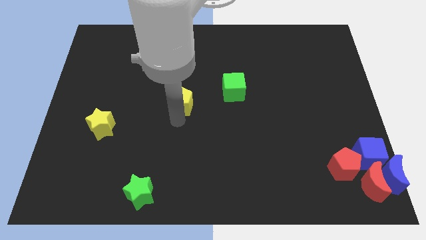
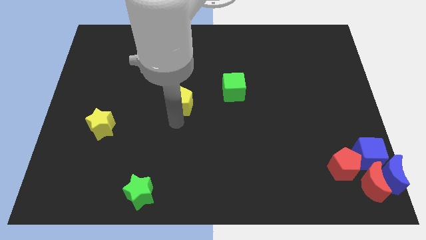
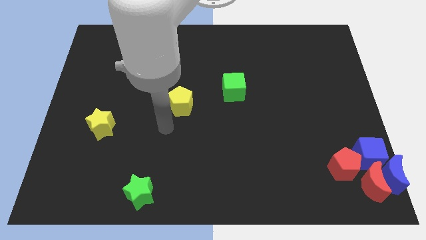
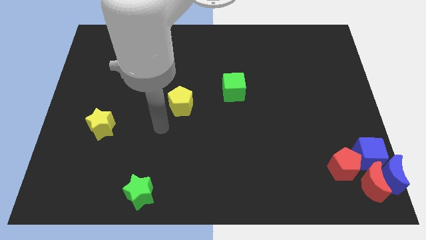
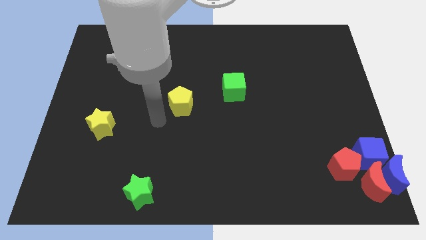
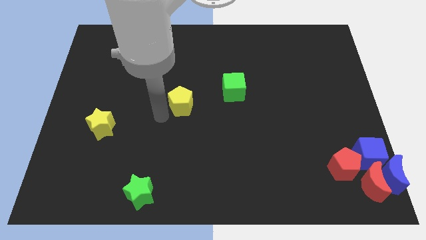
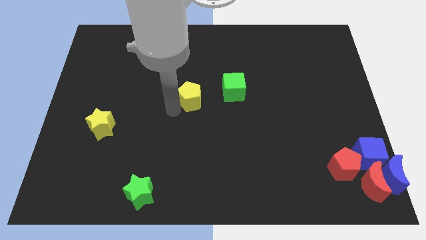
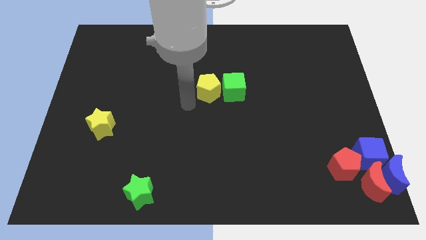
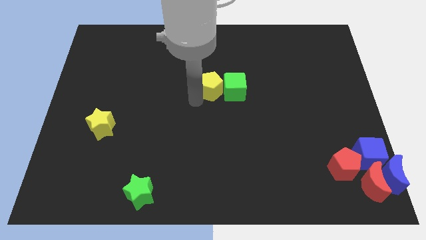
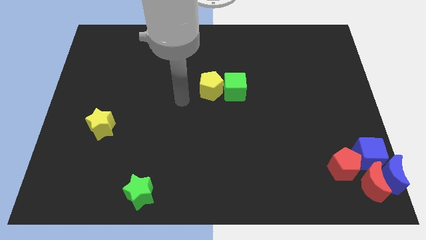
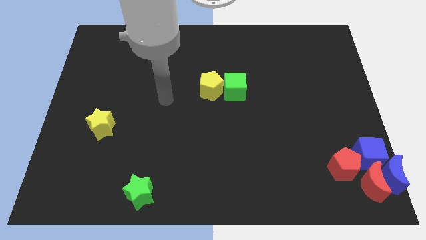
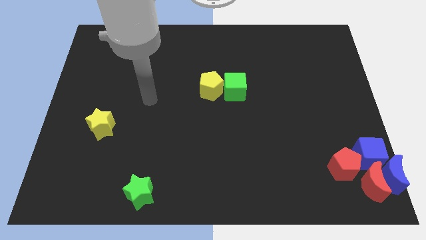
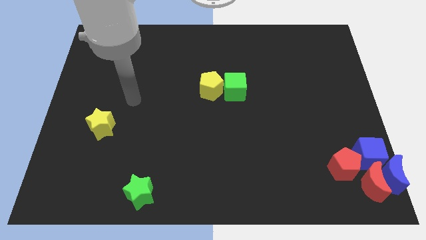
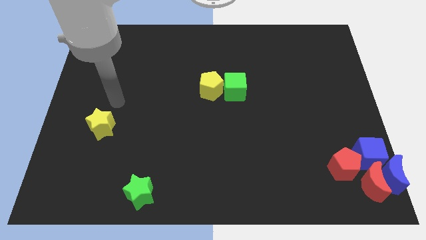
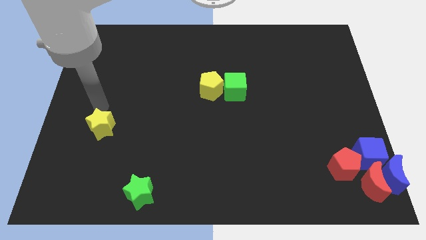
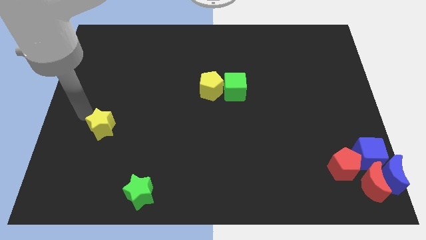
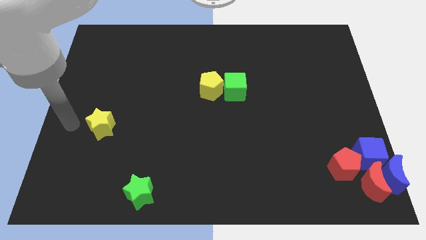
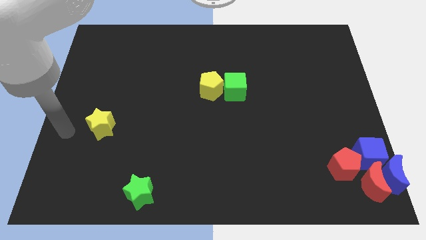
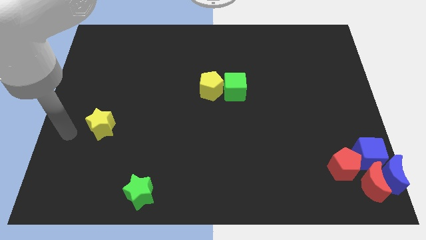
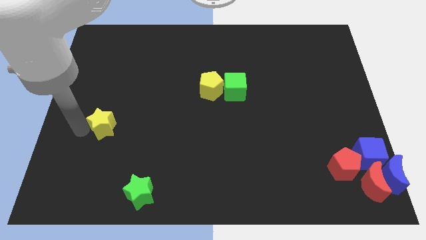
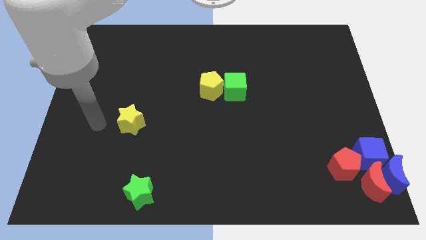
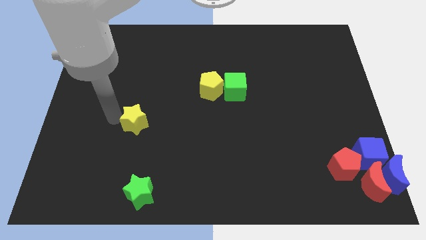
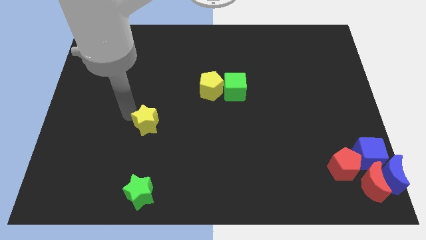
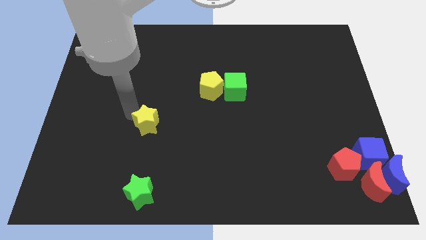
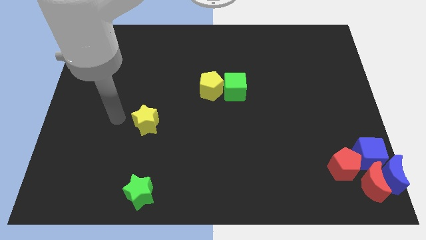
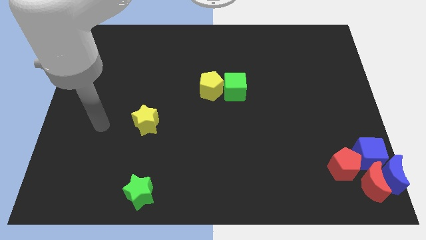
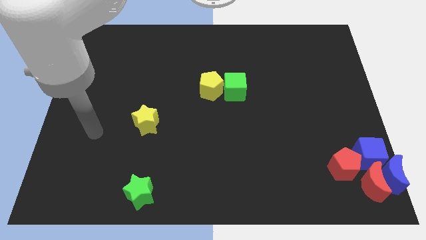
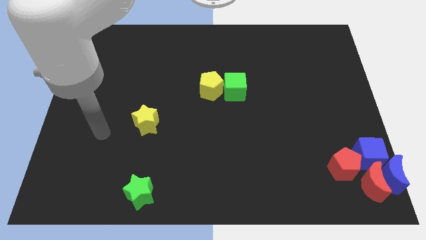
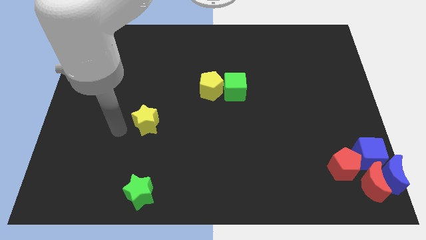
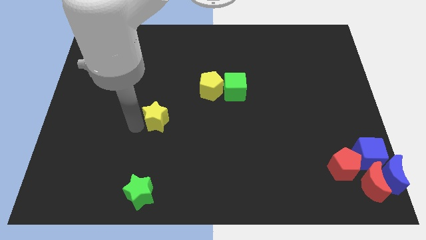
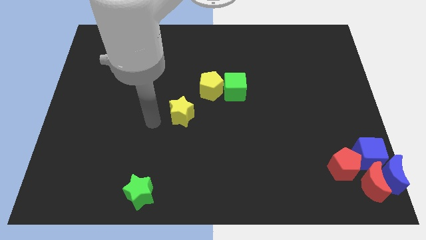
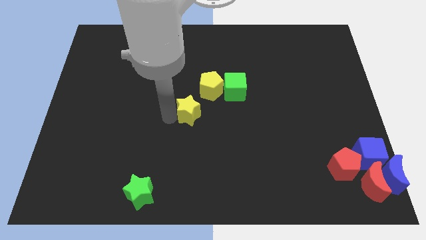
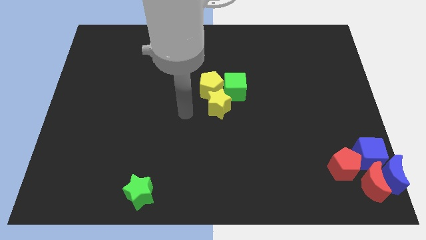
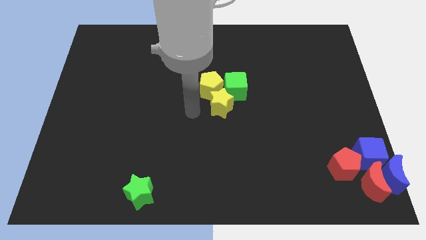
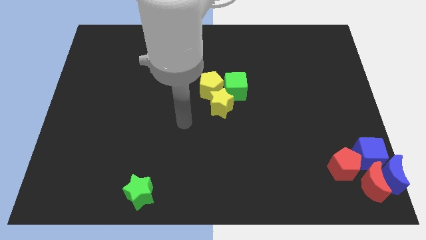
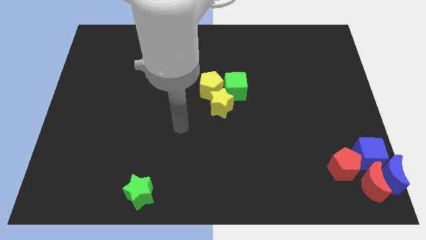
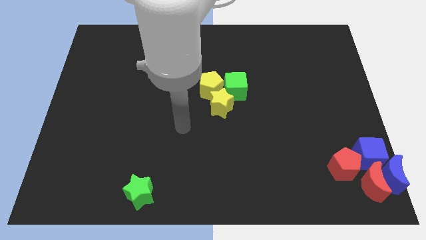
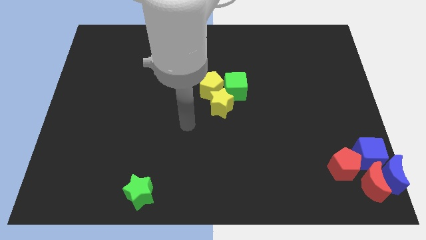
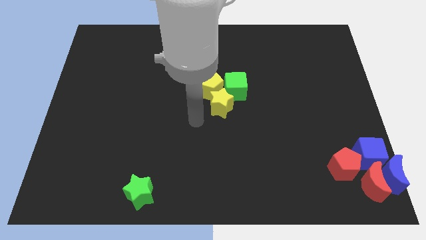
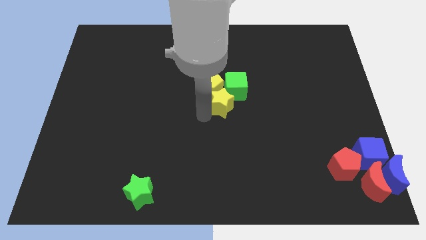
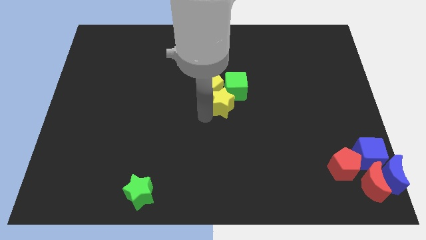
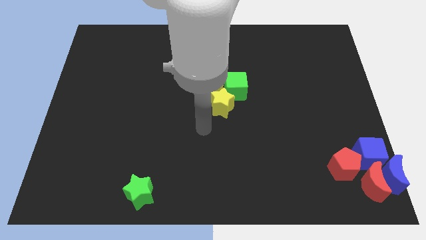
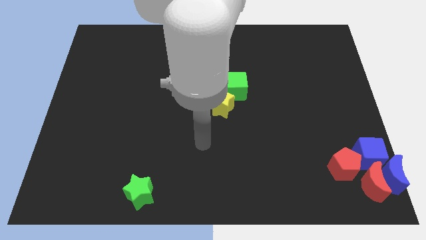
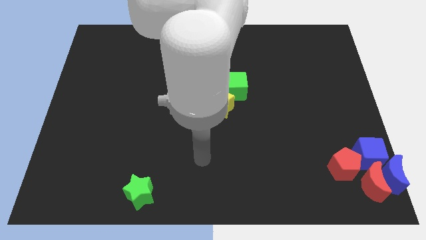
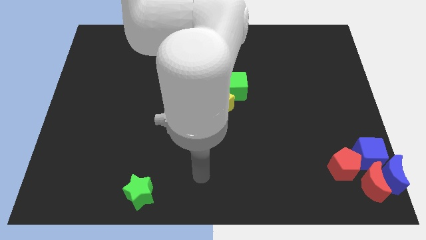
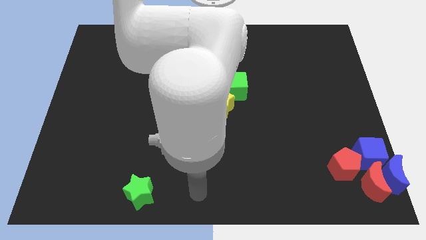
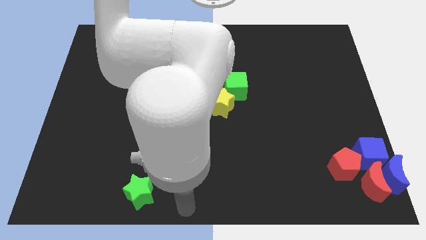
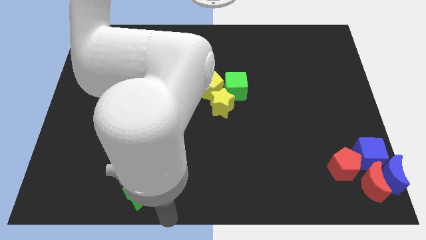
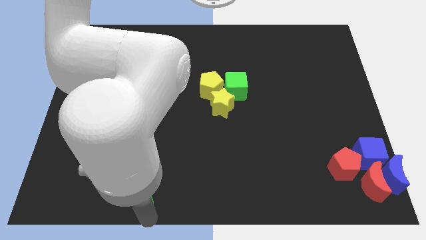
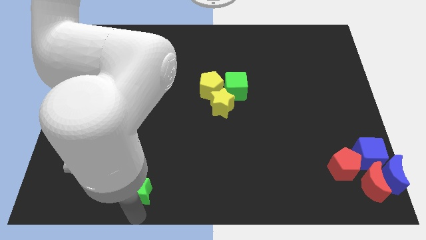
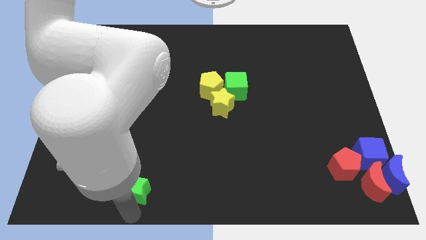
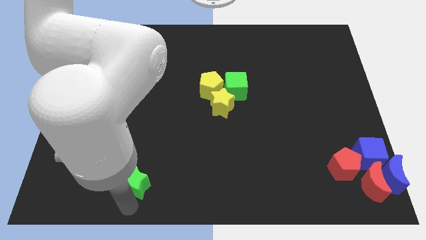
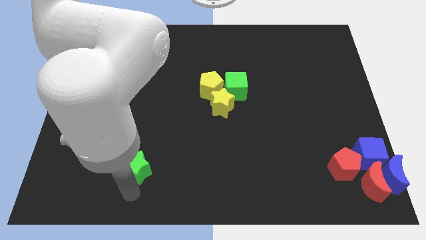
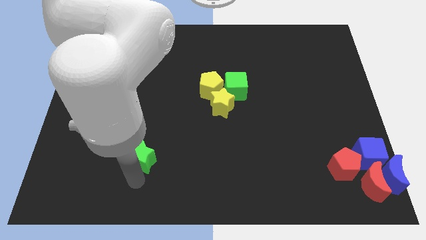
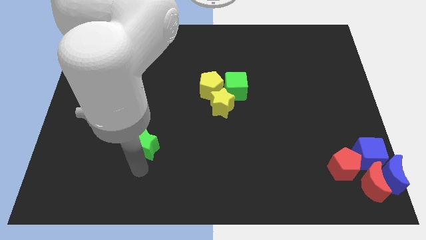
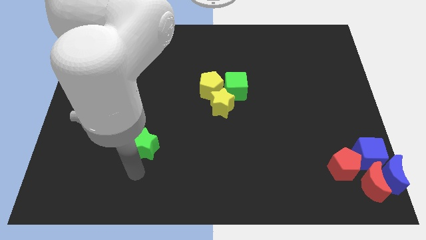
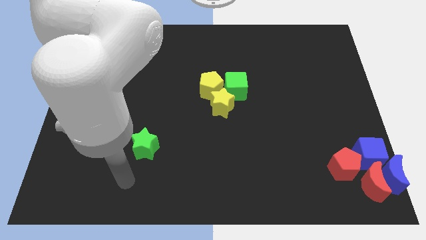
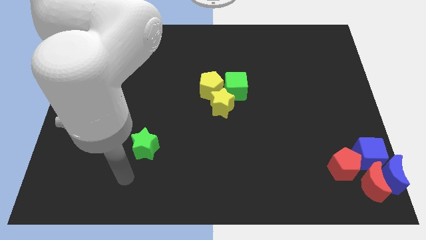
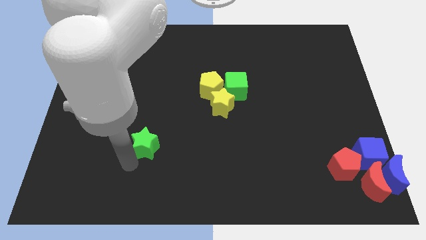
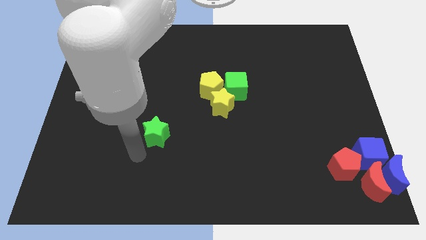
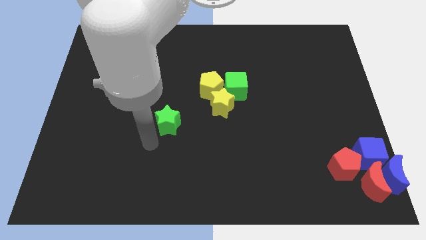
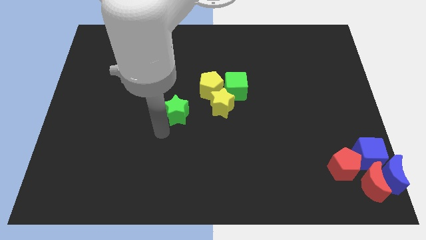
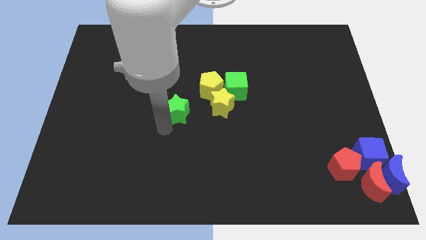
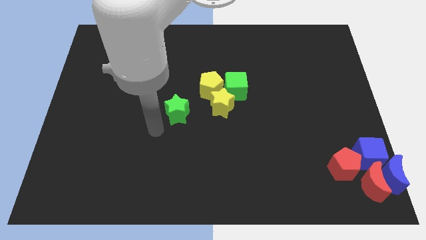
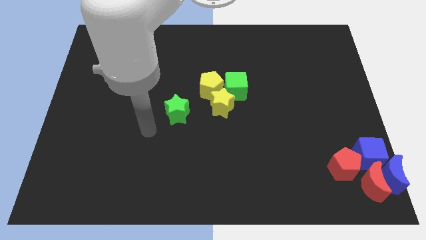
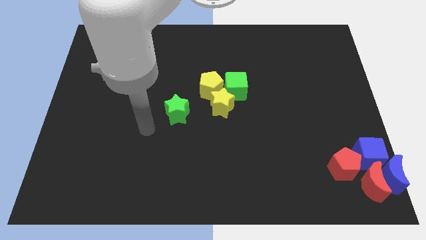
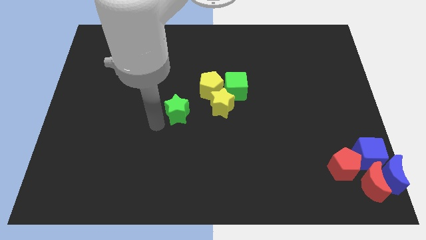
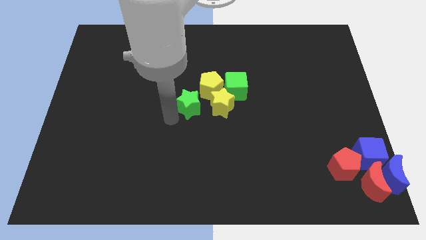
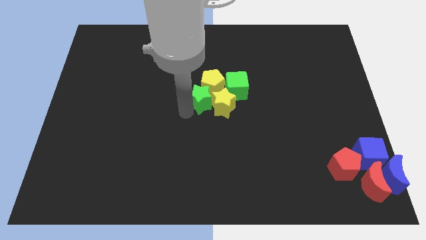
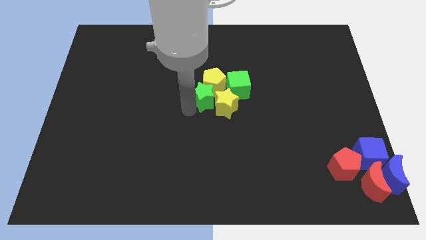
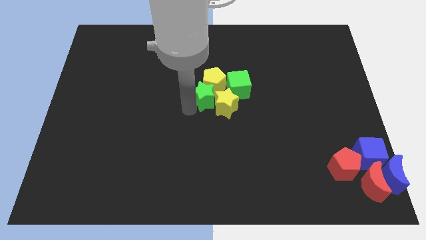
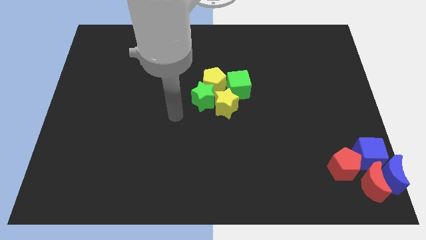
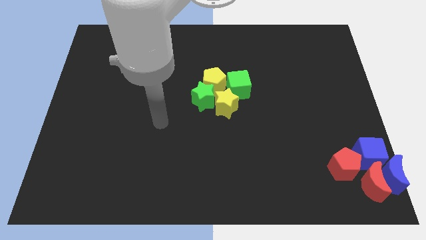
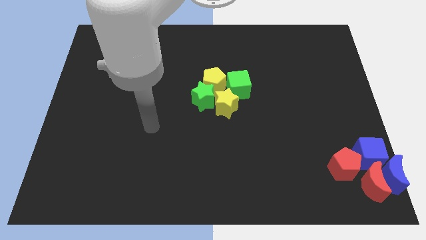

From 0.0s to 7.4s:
join yellow and green blocks at the center of the board

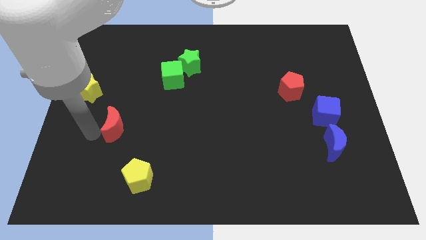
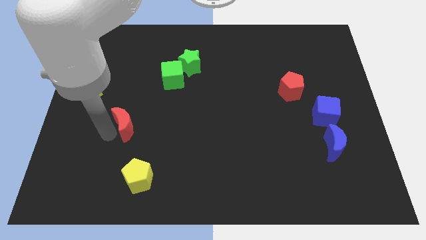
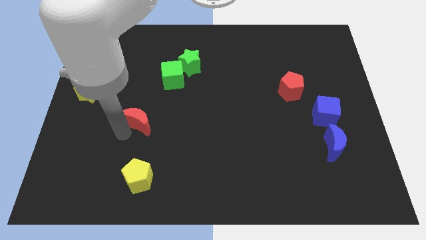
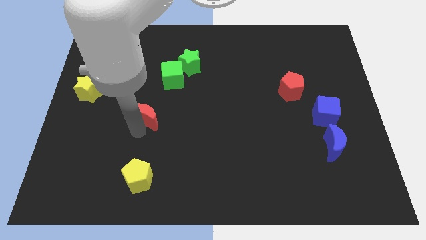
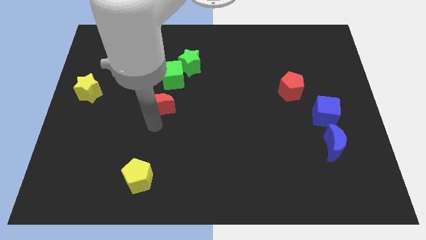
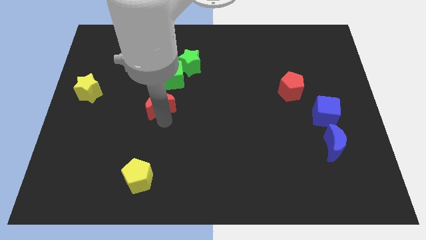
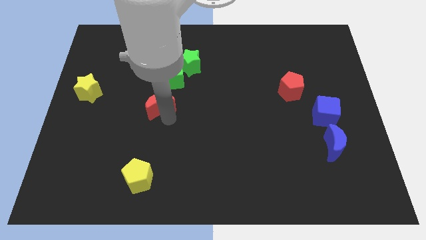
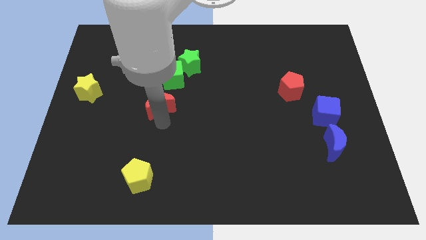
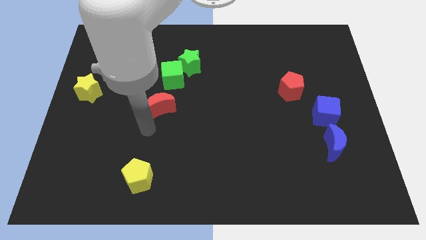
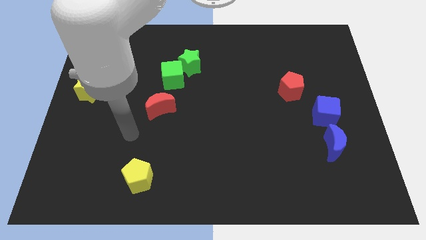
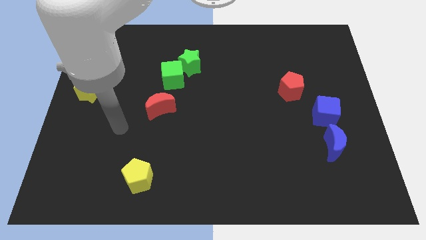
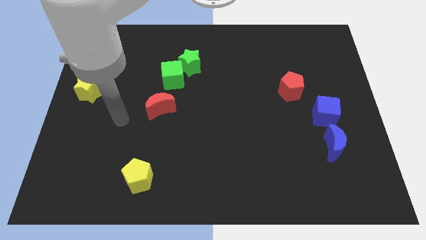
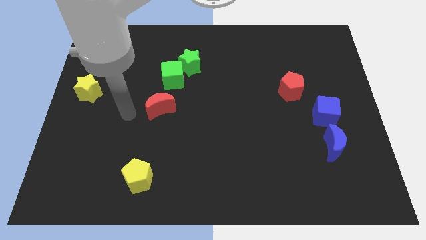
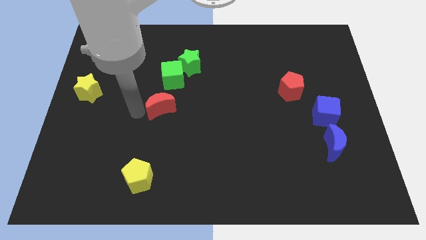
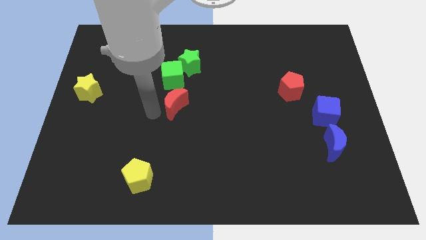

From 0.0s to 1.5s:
move the red crescent to the bottom of the green cube

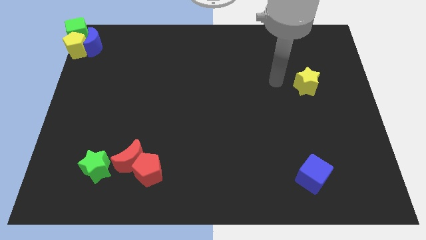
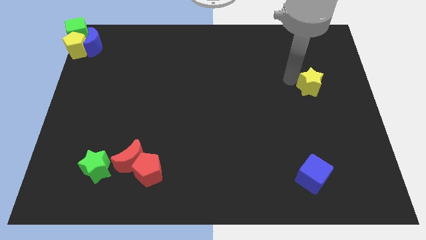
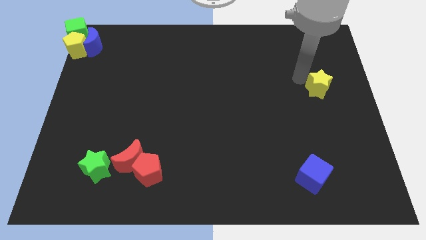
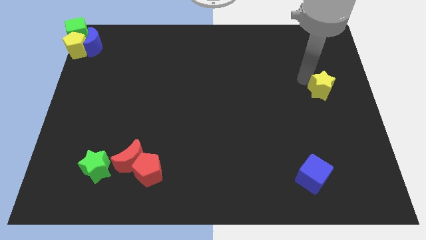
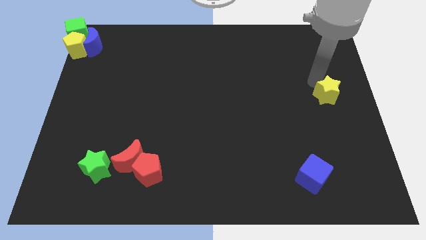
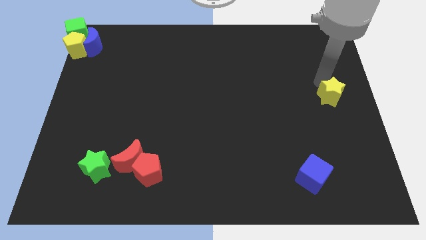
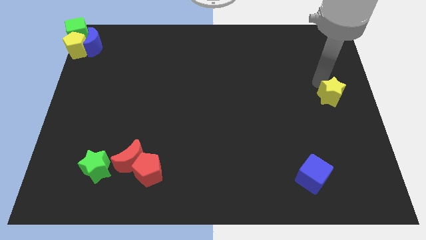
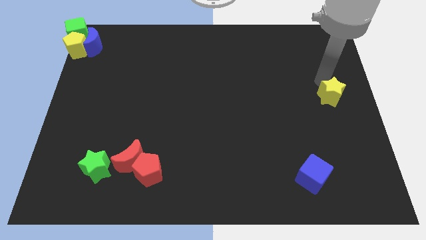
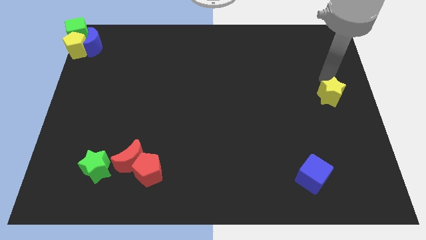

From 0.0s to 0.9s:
go and push the yellow star to the right
